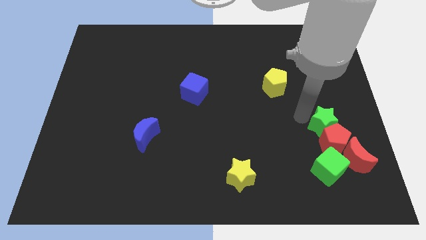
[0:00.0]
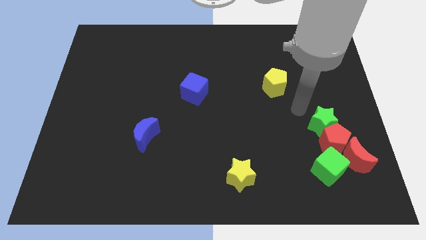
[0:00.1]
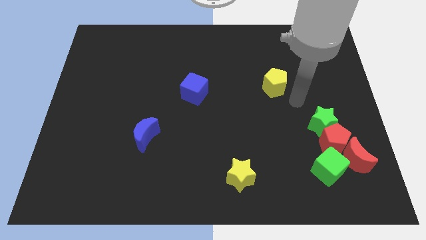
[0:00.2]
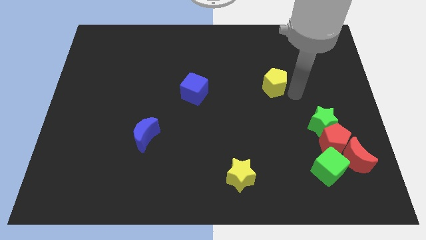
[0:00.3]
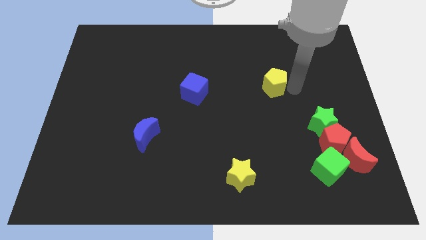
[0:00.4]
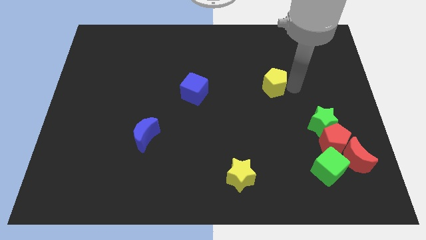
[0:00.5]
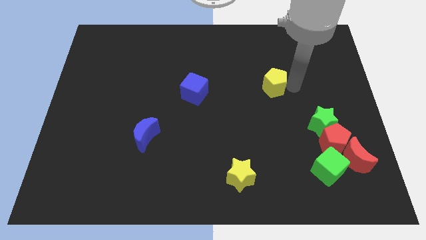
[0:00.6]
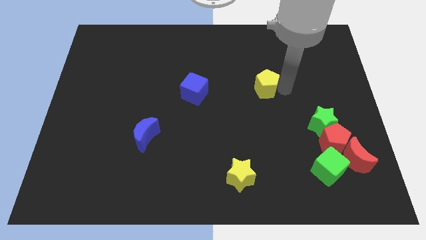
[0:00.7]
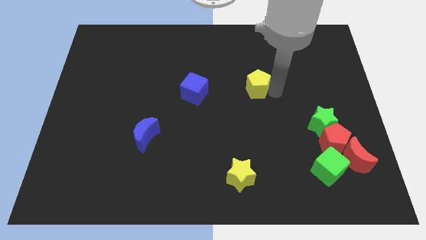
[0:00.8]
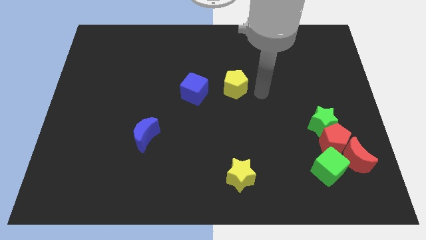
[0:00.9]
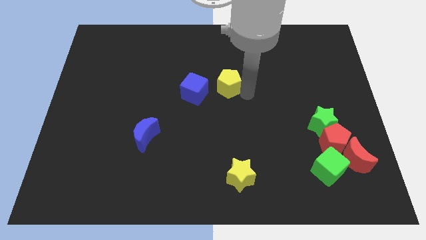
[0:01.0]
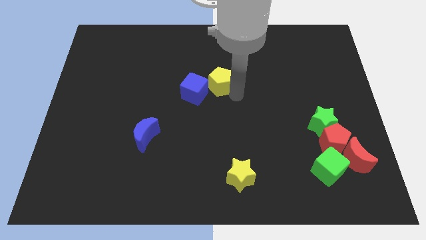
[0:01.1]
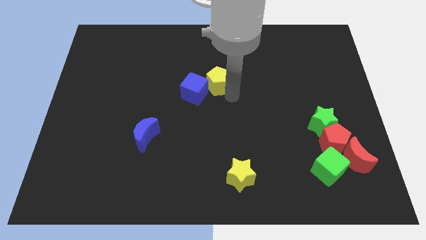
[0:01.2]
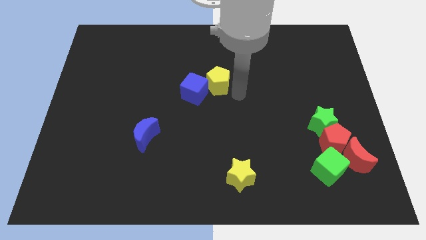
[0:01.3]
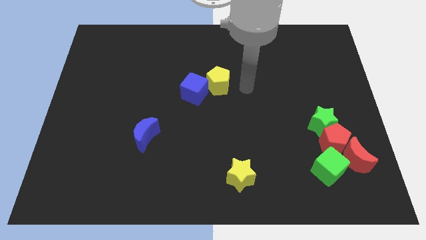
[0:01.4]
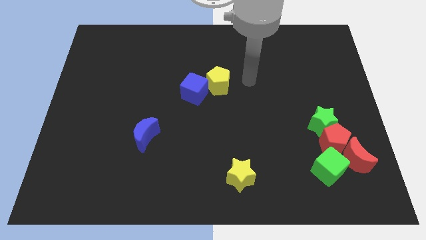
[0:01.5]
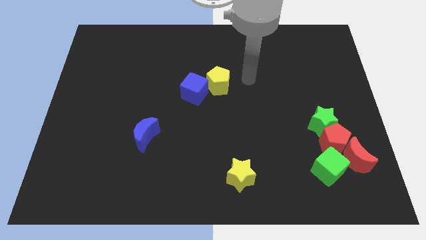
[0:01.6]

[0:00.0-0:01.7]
place the yellow pentagon at the top of the yellow star

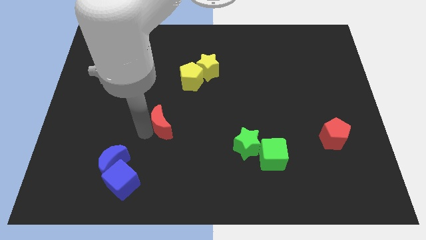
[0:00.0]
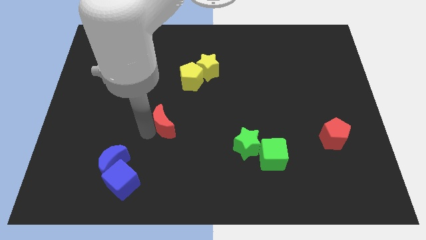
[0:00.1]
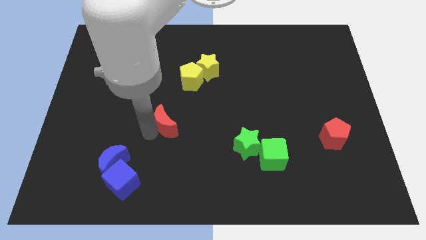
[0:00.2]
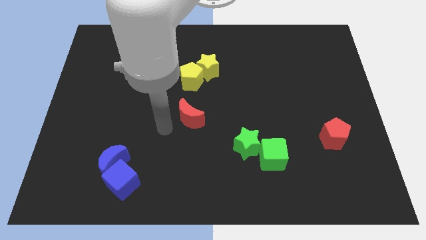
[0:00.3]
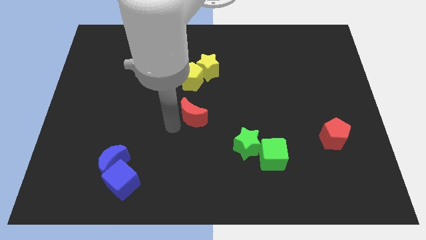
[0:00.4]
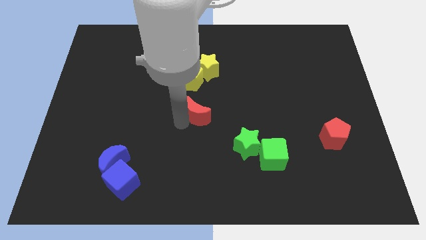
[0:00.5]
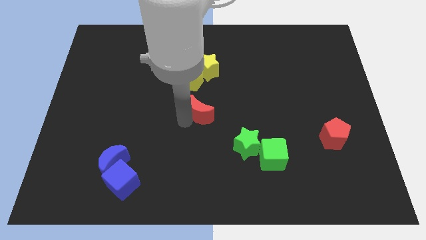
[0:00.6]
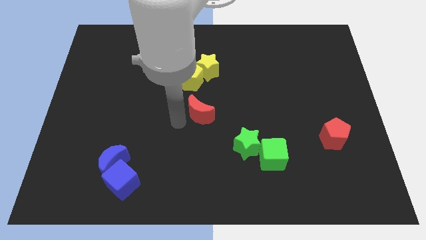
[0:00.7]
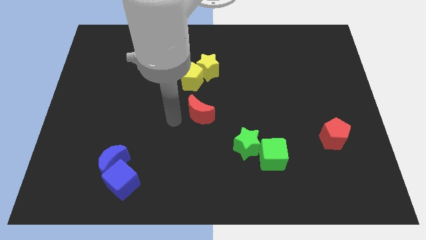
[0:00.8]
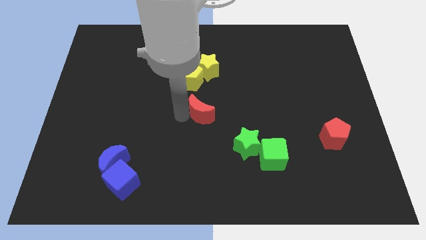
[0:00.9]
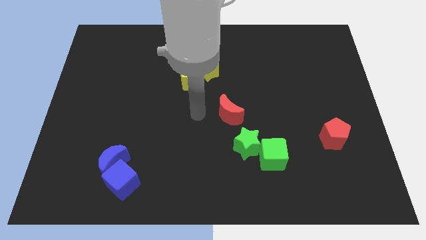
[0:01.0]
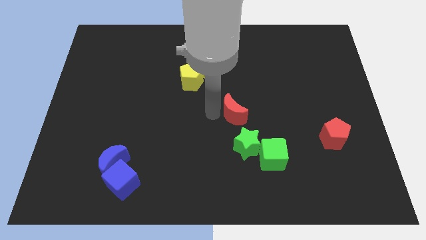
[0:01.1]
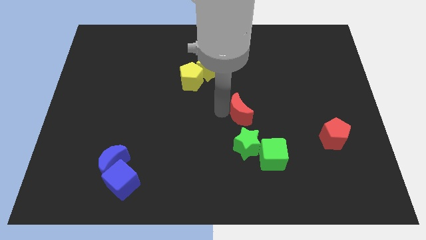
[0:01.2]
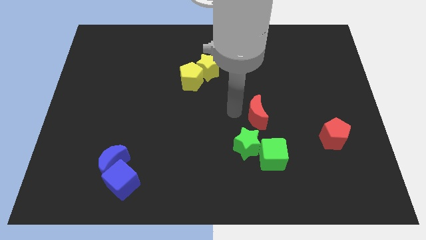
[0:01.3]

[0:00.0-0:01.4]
place the red moon vertically above the green star

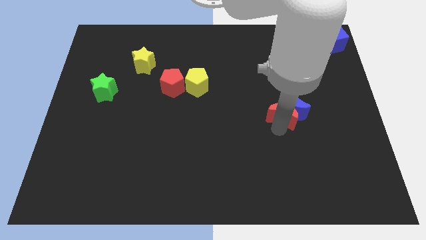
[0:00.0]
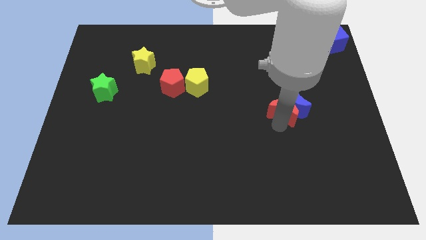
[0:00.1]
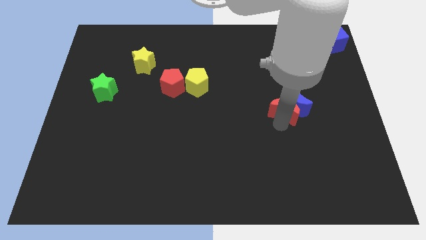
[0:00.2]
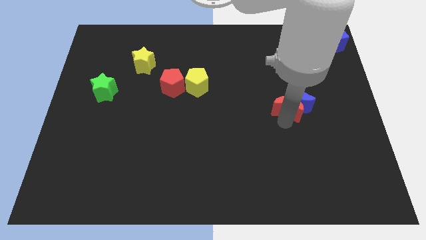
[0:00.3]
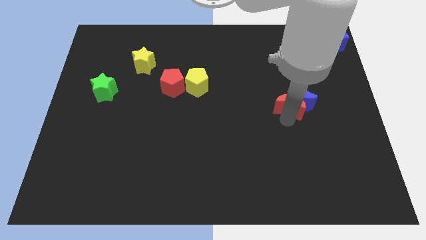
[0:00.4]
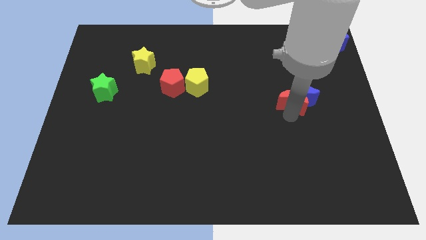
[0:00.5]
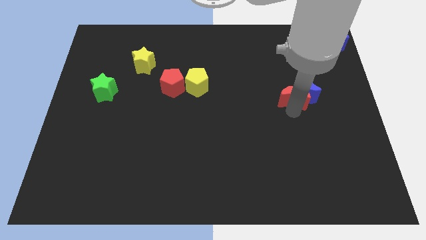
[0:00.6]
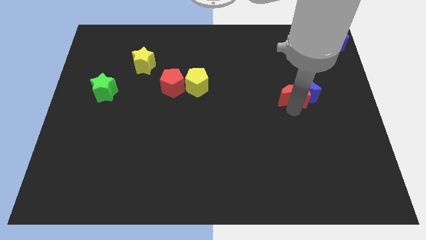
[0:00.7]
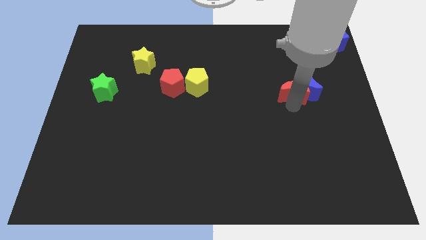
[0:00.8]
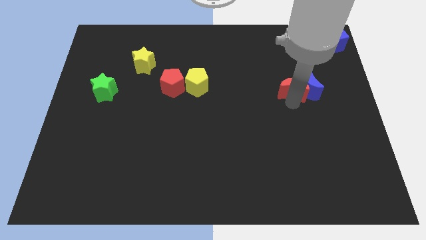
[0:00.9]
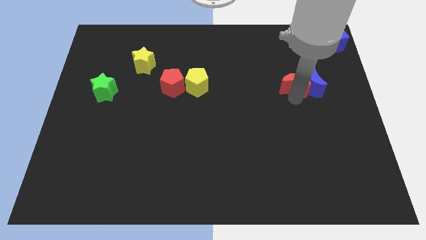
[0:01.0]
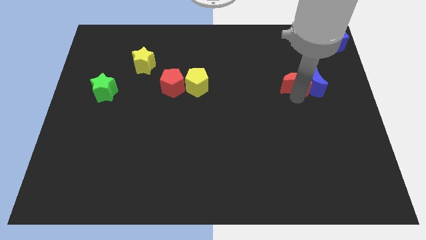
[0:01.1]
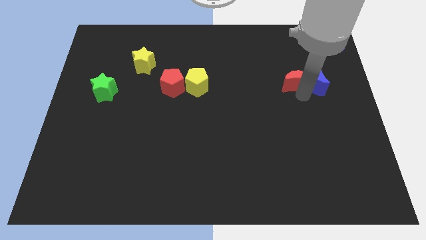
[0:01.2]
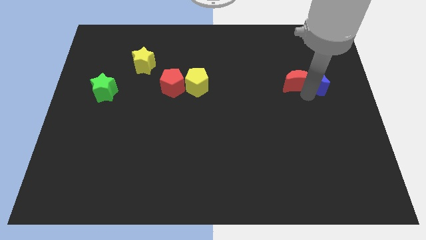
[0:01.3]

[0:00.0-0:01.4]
push the red crescent along with the blue crescent to the top

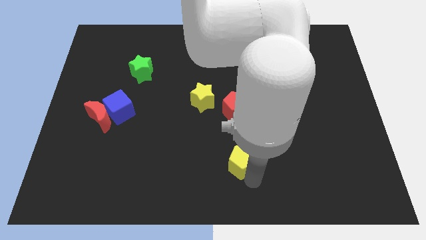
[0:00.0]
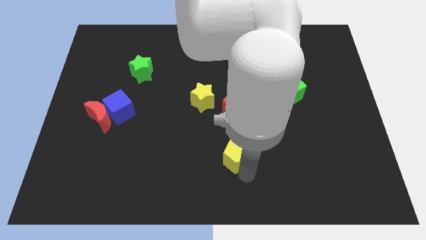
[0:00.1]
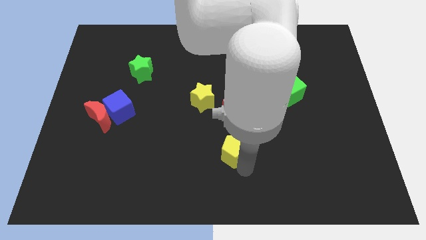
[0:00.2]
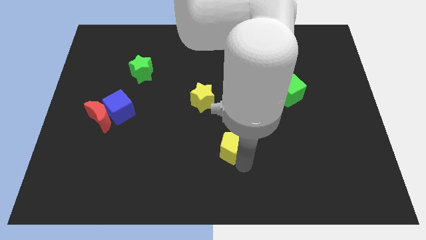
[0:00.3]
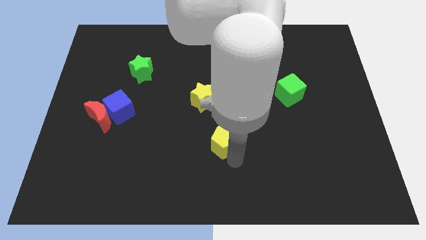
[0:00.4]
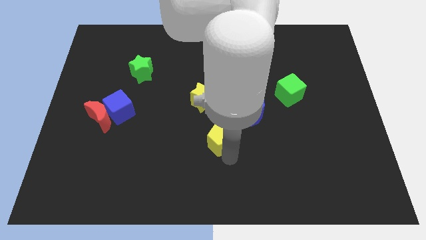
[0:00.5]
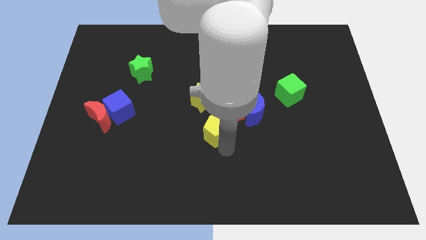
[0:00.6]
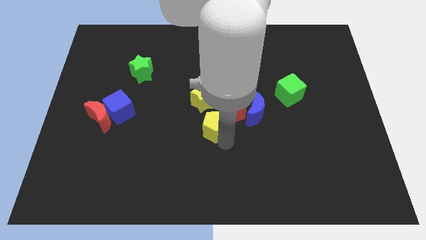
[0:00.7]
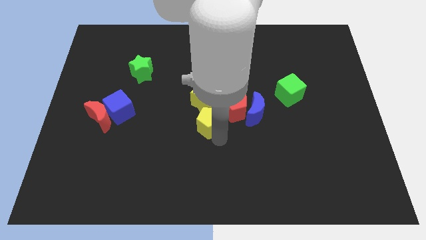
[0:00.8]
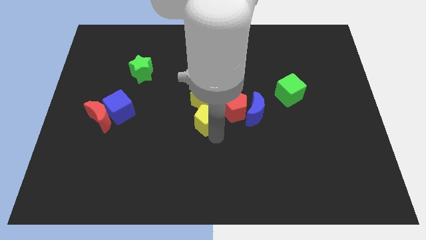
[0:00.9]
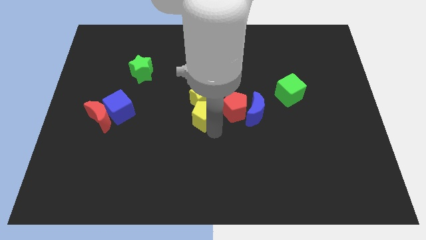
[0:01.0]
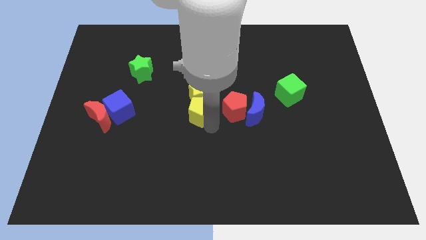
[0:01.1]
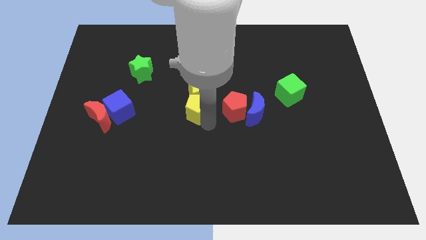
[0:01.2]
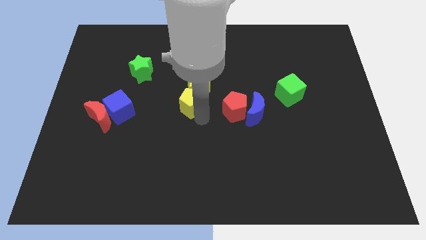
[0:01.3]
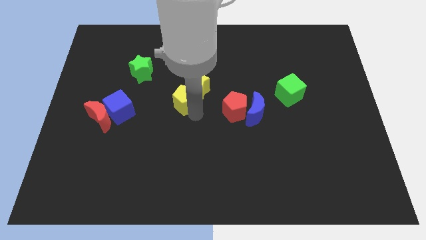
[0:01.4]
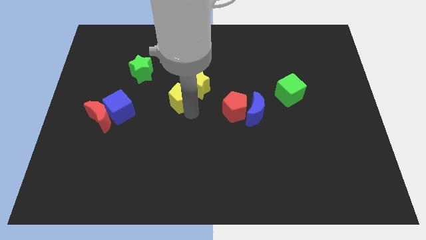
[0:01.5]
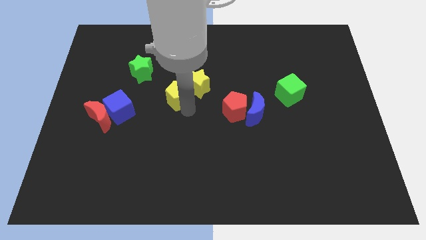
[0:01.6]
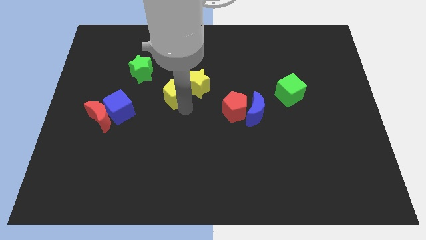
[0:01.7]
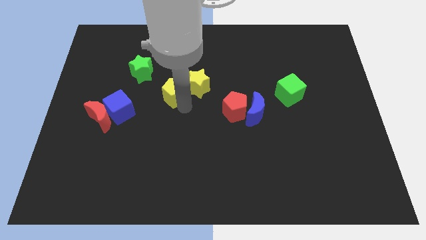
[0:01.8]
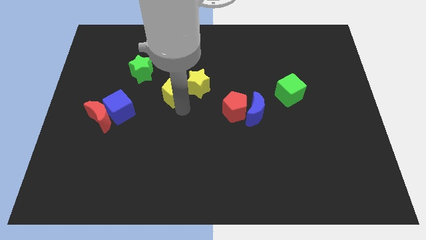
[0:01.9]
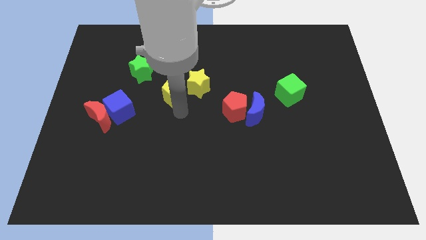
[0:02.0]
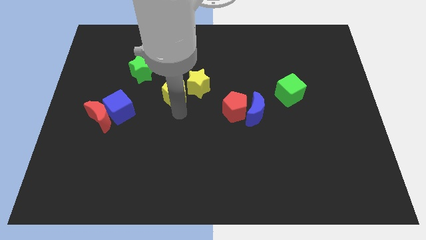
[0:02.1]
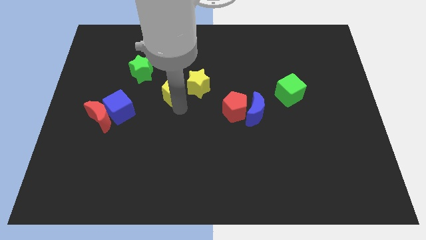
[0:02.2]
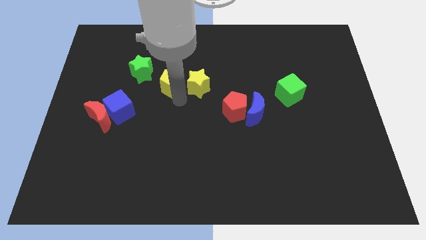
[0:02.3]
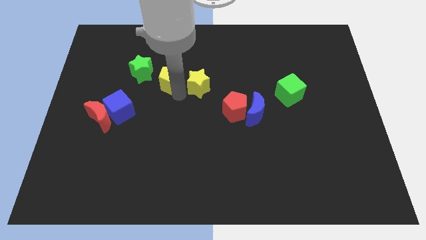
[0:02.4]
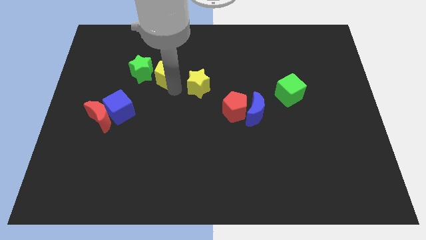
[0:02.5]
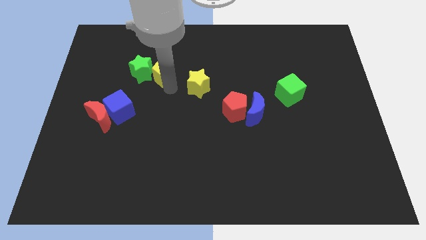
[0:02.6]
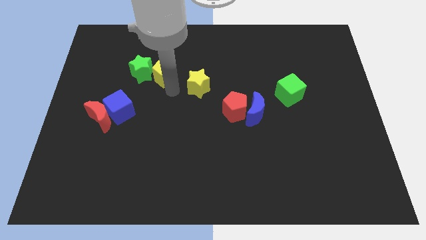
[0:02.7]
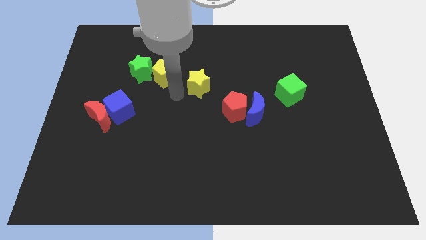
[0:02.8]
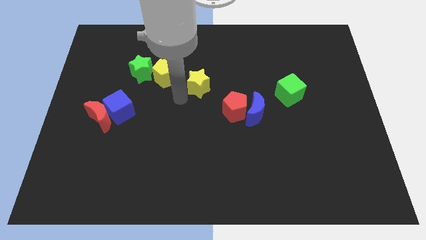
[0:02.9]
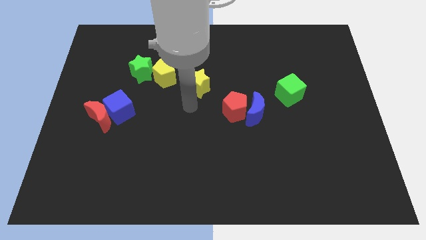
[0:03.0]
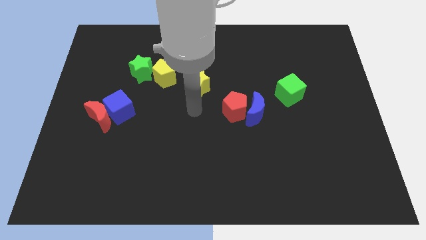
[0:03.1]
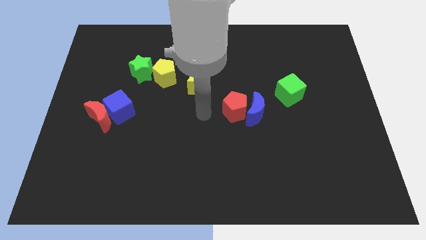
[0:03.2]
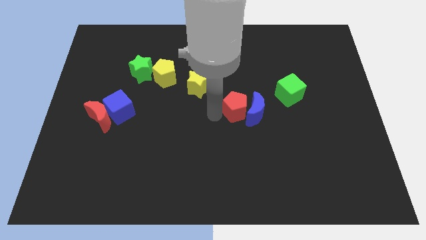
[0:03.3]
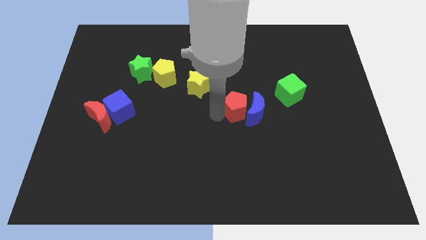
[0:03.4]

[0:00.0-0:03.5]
place the yellow pentagon right to the green star

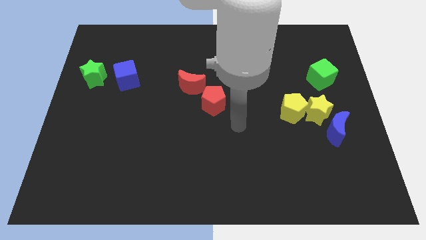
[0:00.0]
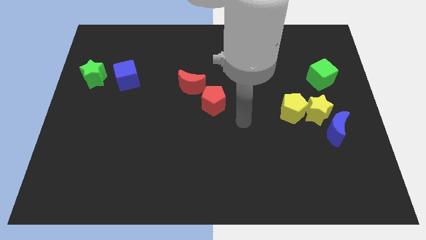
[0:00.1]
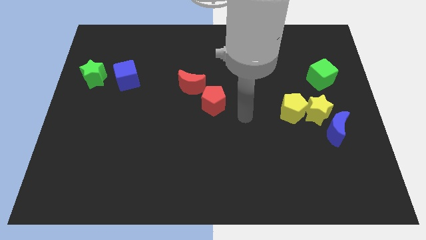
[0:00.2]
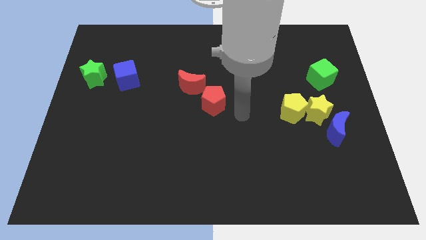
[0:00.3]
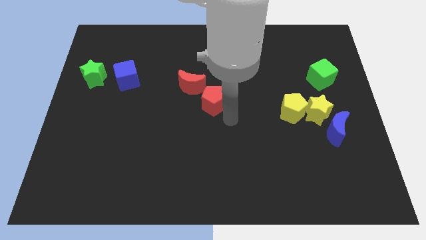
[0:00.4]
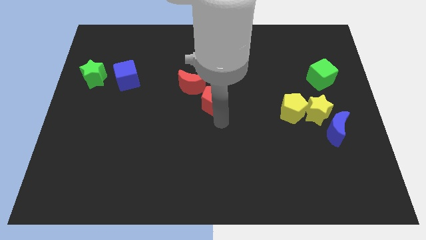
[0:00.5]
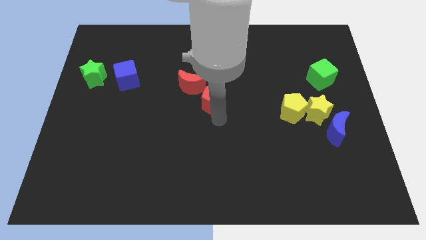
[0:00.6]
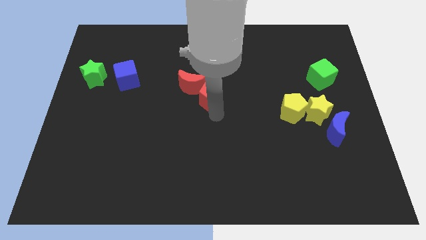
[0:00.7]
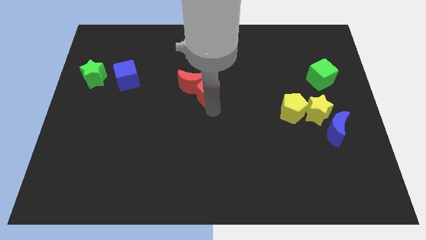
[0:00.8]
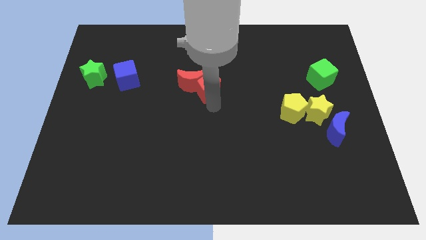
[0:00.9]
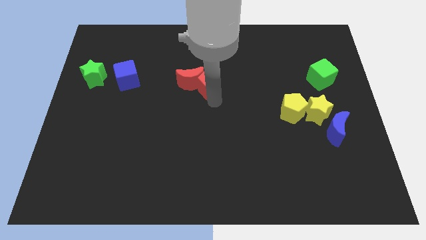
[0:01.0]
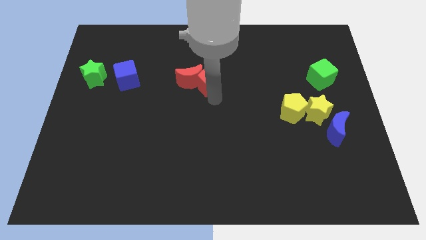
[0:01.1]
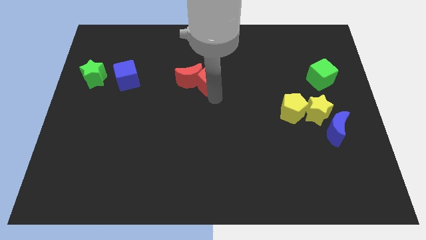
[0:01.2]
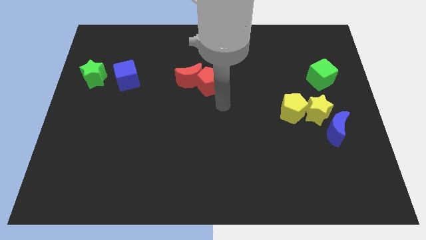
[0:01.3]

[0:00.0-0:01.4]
move red blocks slightly up
